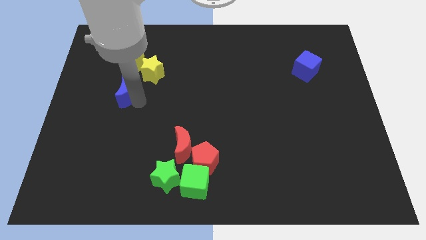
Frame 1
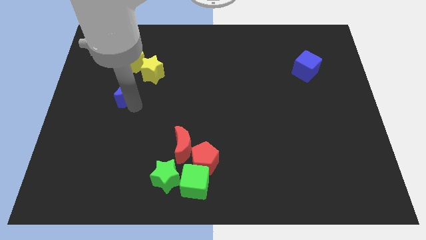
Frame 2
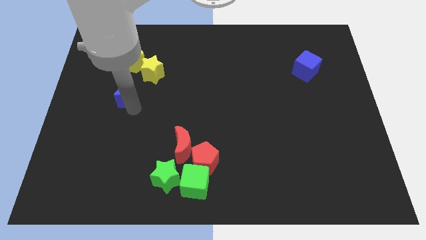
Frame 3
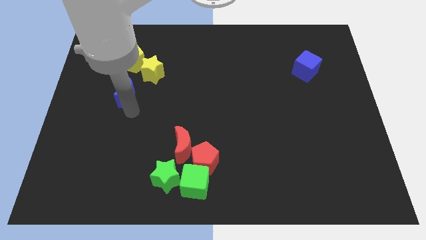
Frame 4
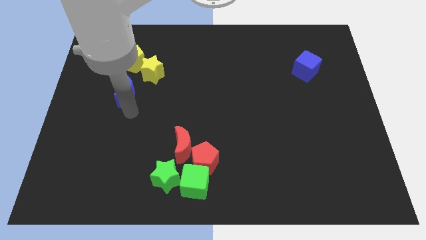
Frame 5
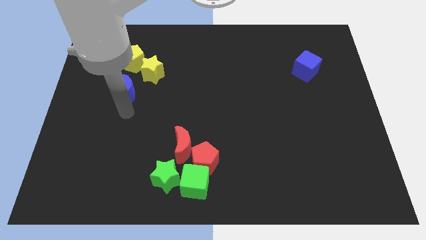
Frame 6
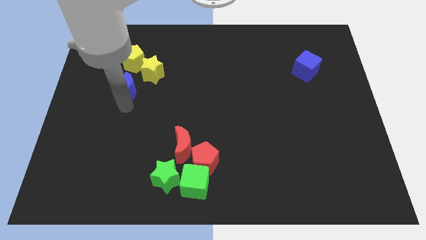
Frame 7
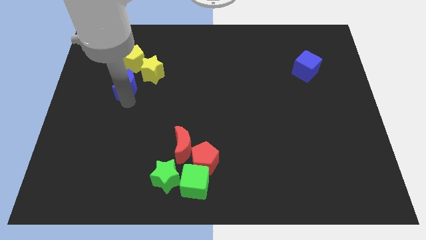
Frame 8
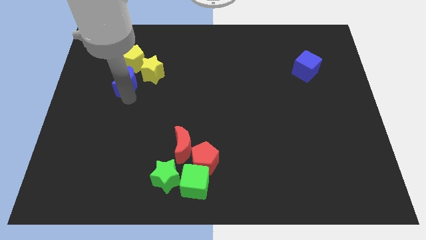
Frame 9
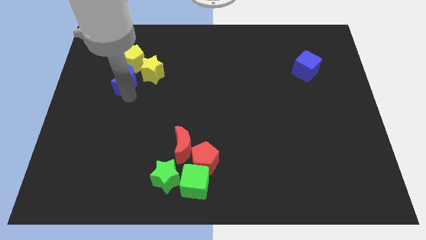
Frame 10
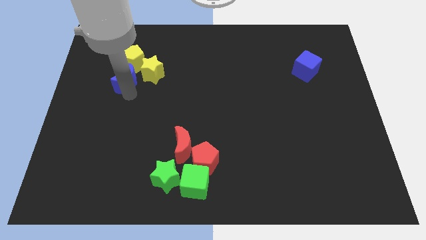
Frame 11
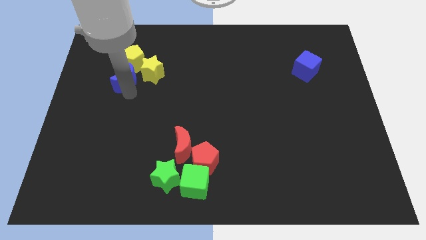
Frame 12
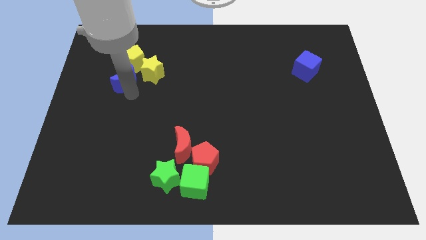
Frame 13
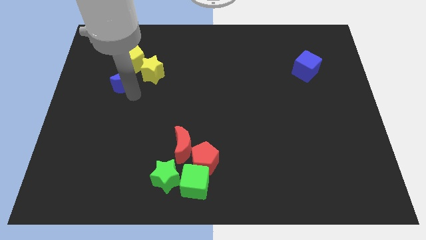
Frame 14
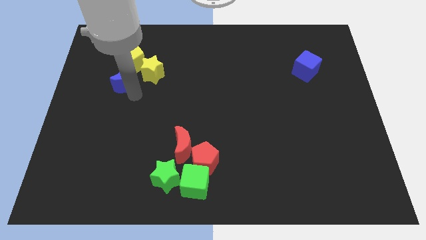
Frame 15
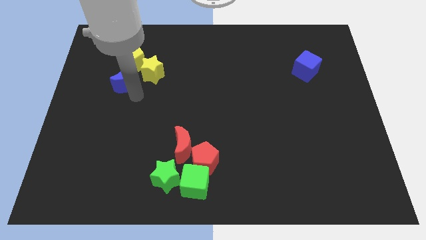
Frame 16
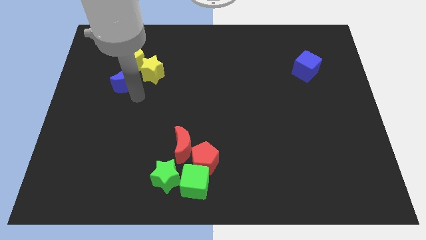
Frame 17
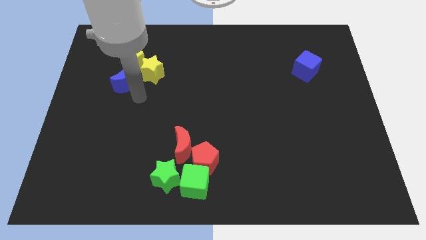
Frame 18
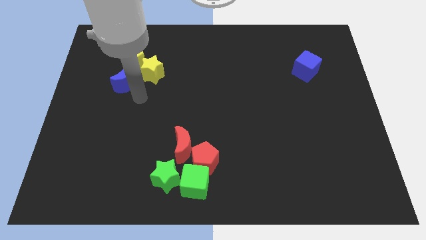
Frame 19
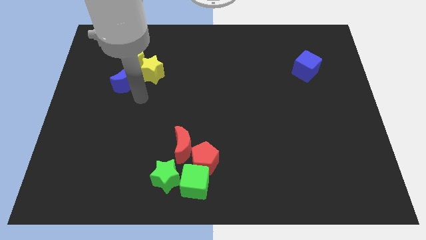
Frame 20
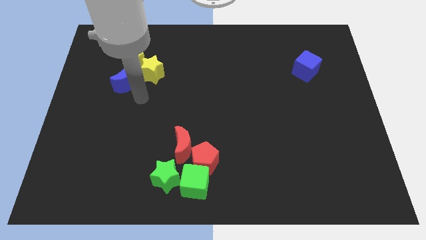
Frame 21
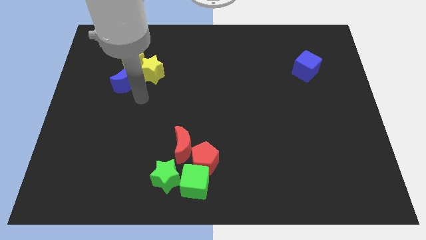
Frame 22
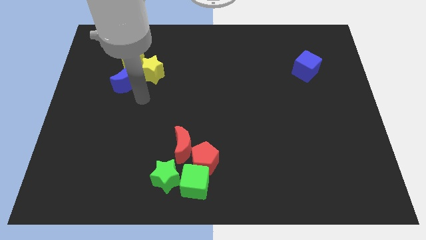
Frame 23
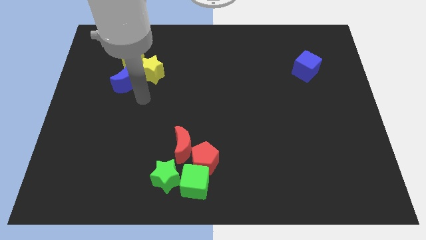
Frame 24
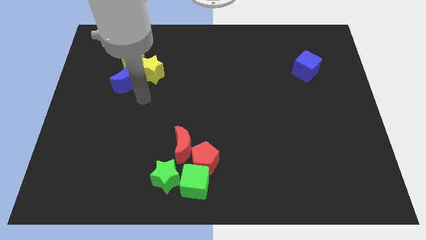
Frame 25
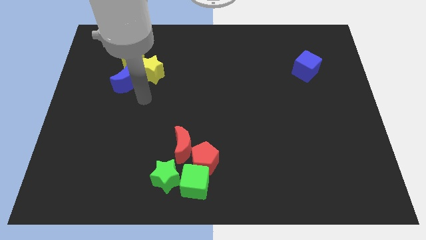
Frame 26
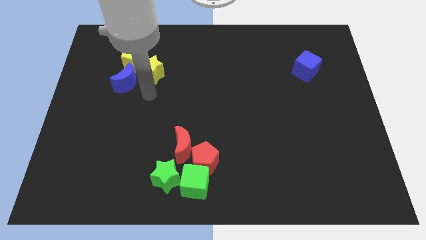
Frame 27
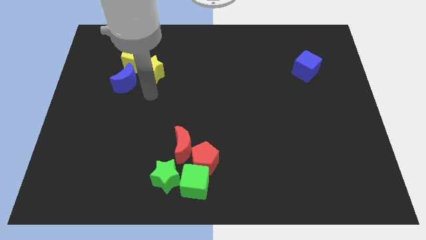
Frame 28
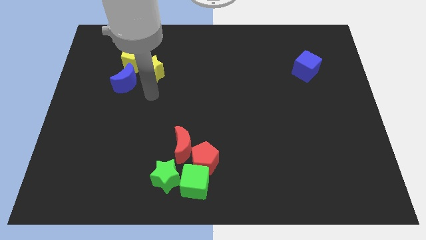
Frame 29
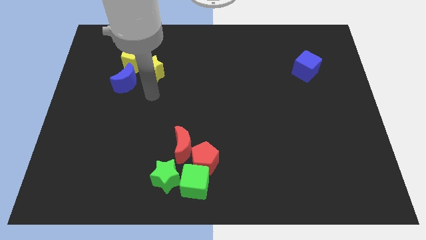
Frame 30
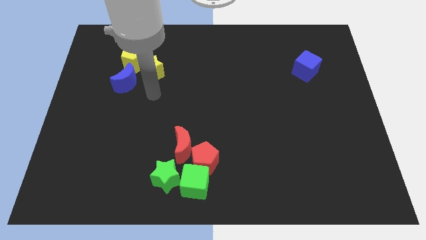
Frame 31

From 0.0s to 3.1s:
push blue moon close to yellow pentagon

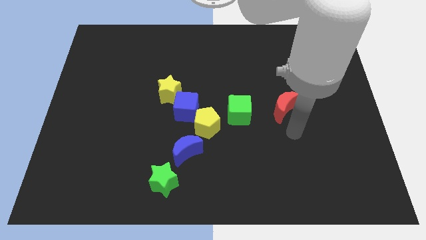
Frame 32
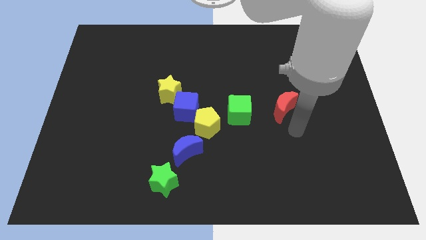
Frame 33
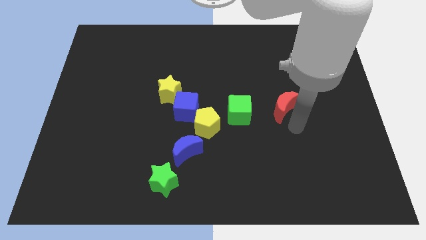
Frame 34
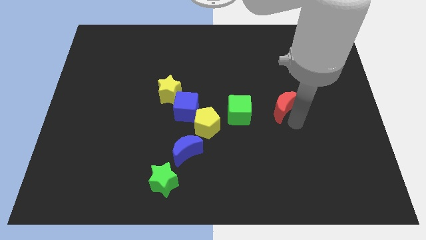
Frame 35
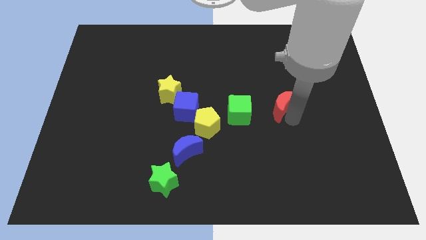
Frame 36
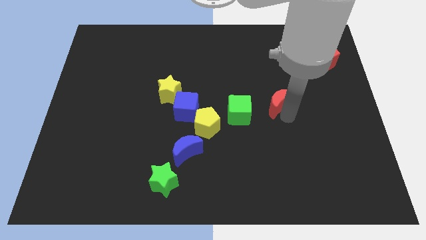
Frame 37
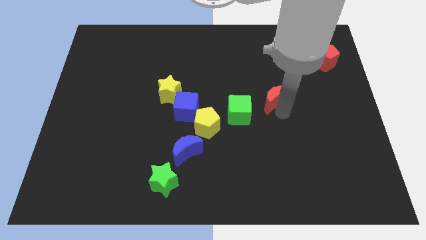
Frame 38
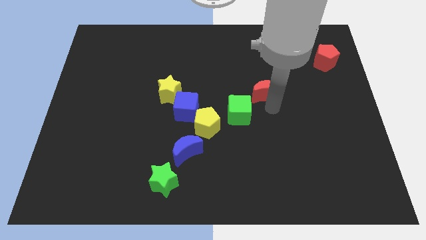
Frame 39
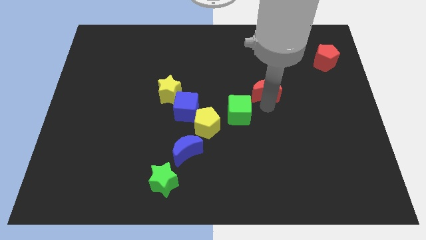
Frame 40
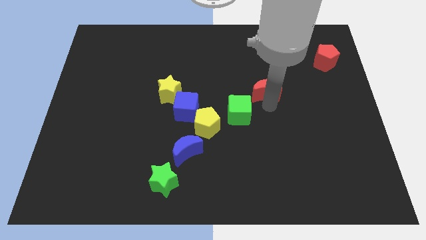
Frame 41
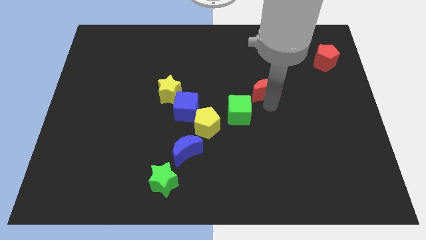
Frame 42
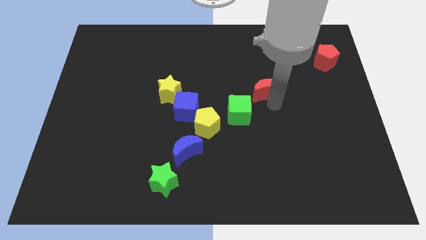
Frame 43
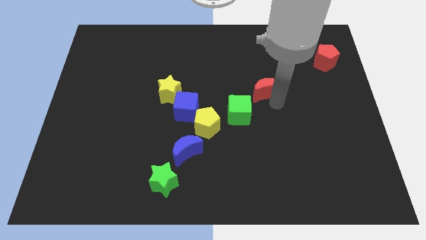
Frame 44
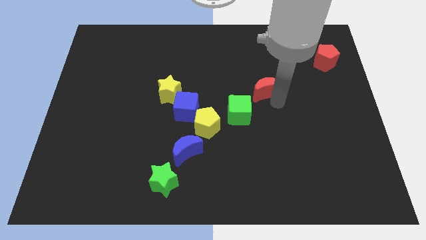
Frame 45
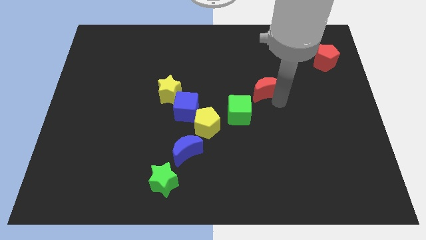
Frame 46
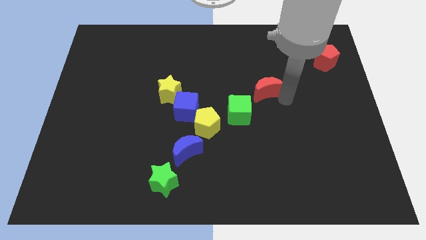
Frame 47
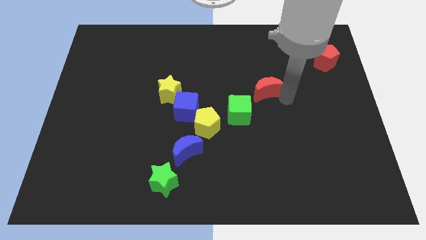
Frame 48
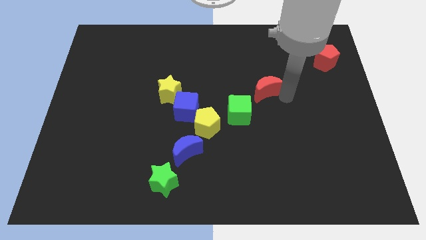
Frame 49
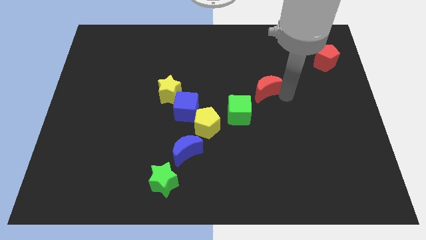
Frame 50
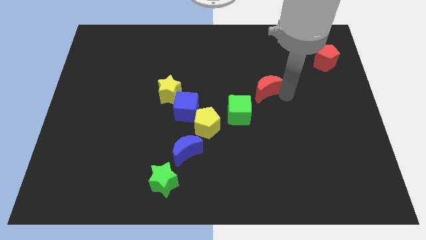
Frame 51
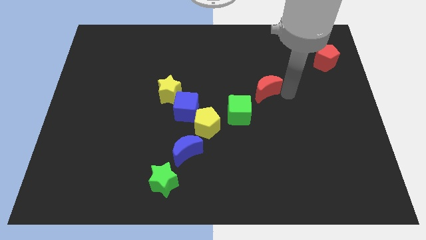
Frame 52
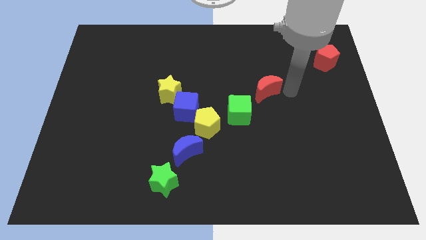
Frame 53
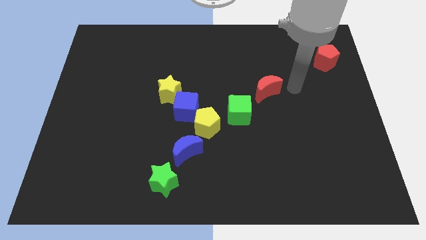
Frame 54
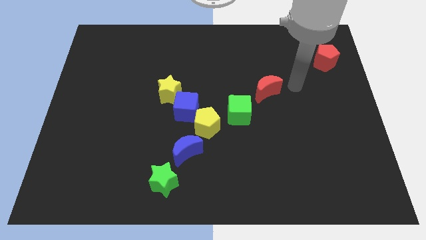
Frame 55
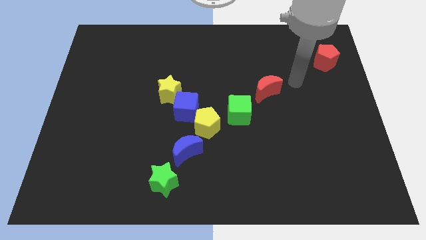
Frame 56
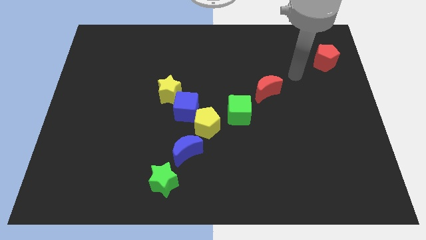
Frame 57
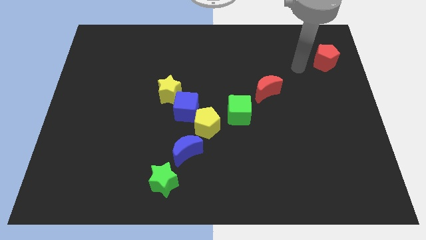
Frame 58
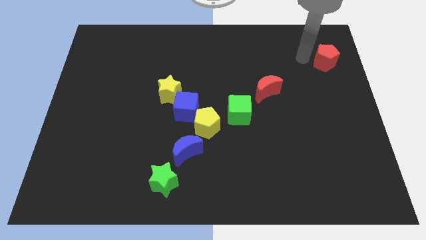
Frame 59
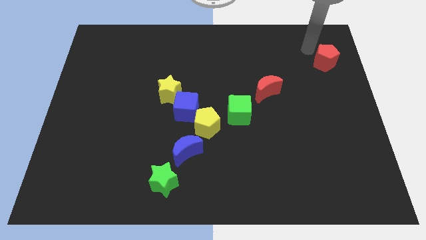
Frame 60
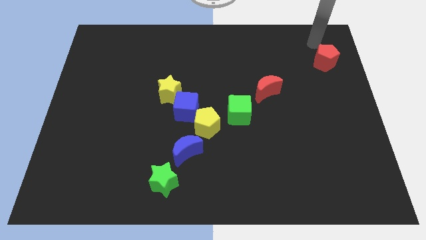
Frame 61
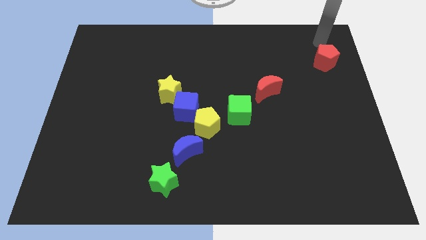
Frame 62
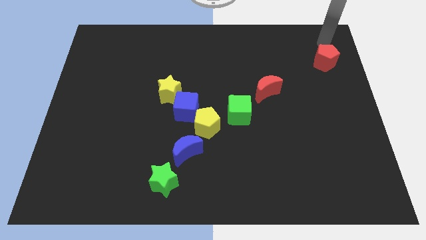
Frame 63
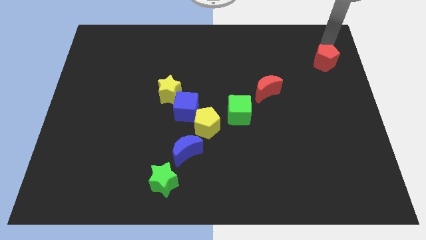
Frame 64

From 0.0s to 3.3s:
place the arm above the red pentagon

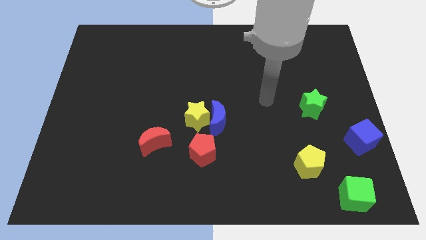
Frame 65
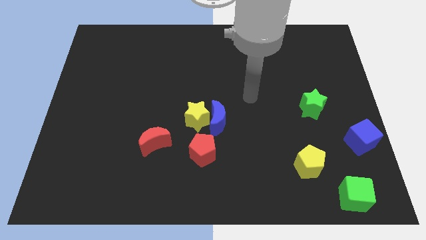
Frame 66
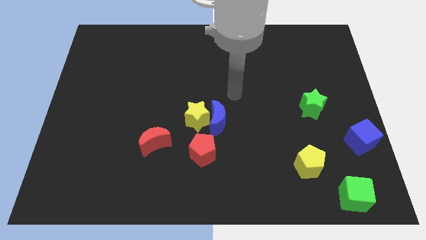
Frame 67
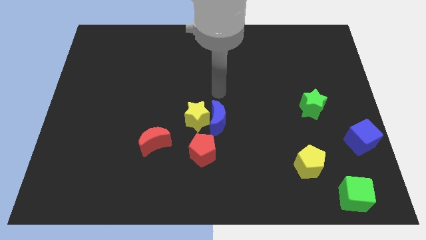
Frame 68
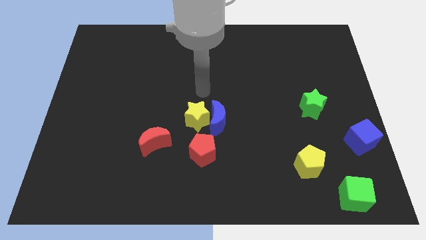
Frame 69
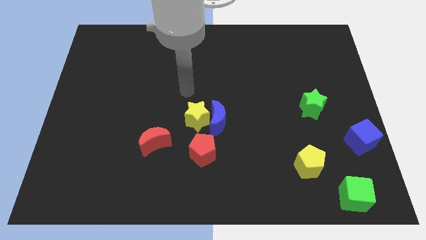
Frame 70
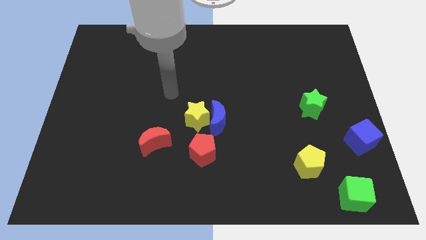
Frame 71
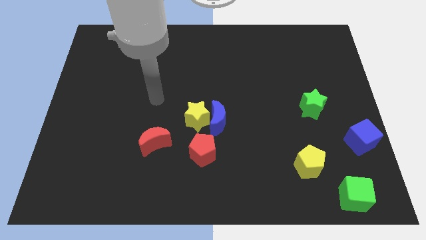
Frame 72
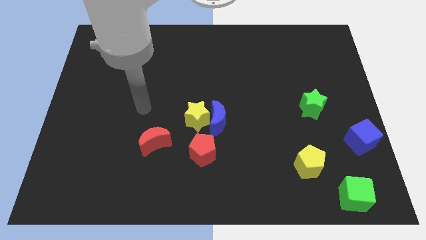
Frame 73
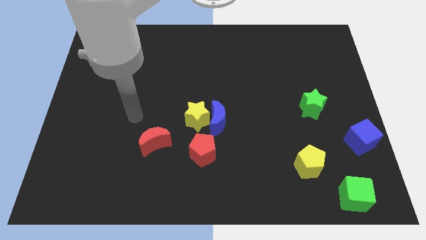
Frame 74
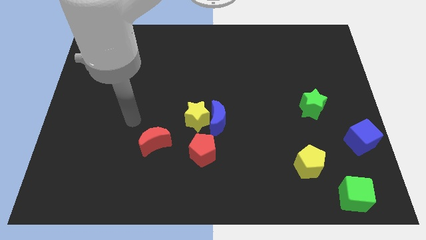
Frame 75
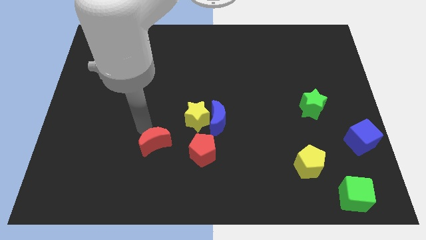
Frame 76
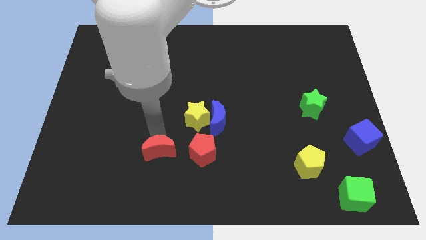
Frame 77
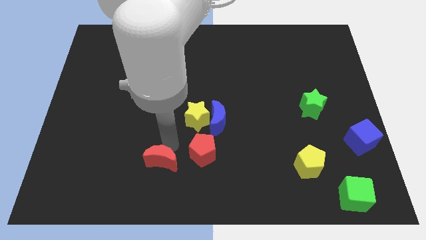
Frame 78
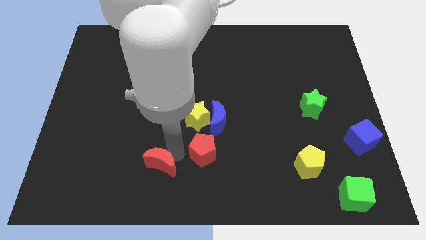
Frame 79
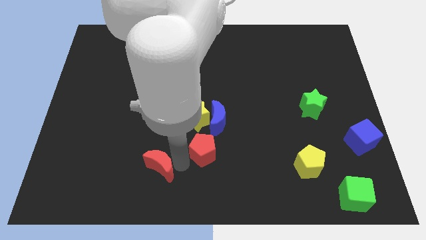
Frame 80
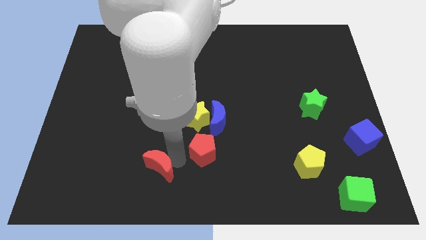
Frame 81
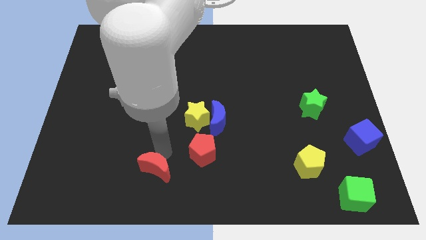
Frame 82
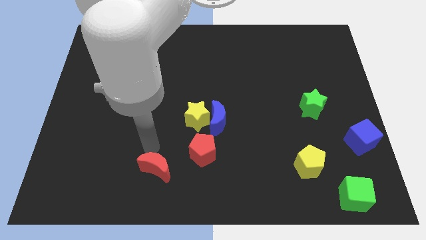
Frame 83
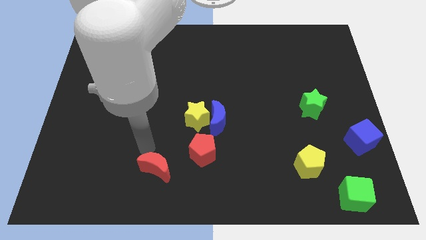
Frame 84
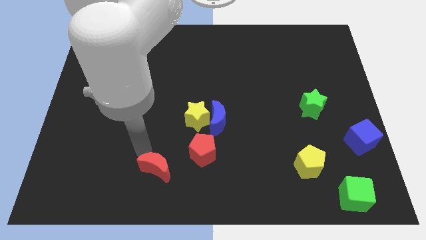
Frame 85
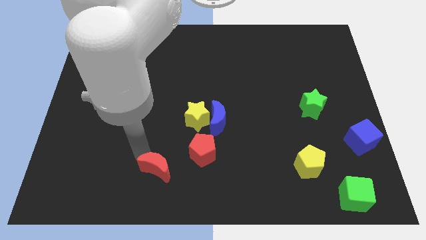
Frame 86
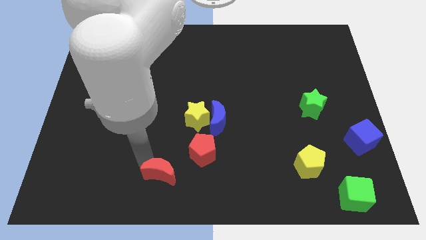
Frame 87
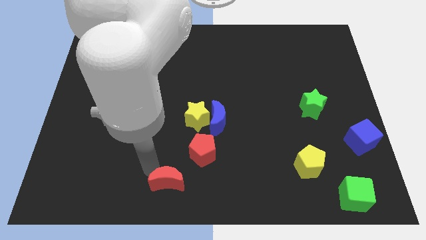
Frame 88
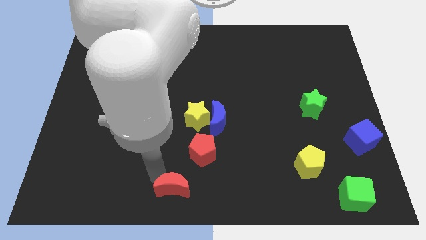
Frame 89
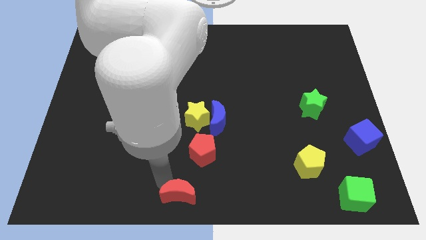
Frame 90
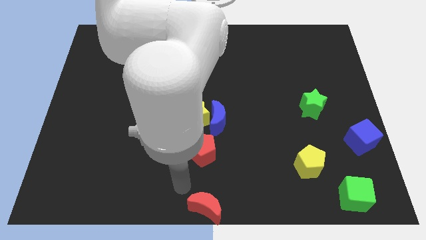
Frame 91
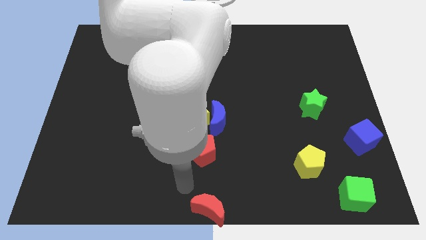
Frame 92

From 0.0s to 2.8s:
place the red moon to the center bottom of the board
